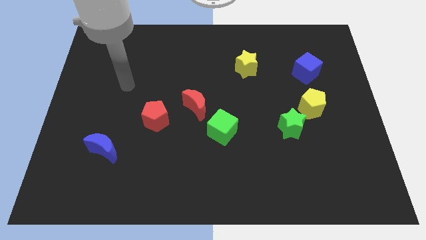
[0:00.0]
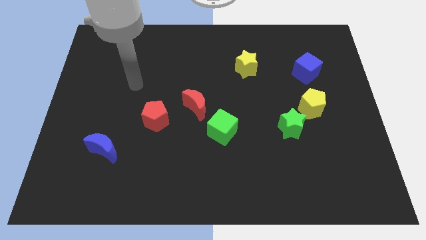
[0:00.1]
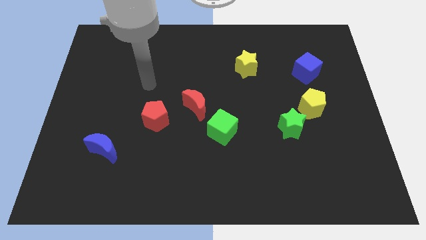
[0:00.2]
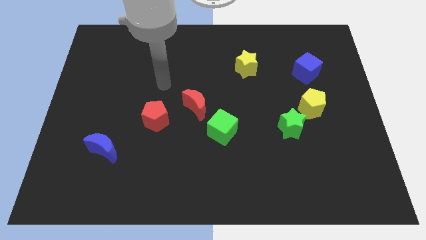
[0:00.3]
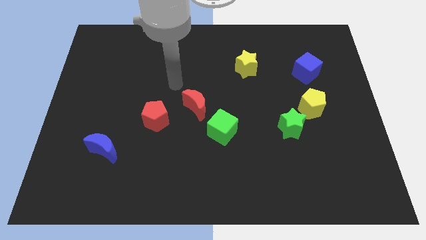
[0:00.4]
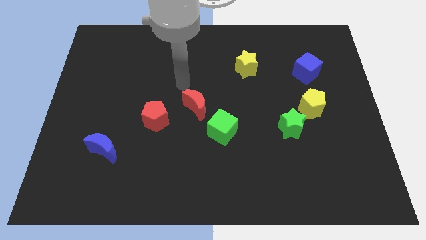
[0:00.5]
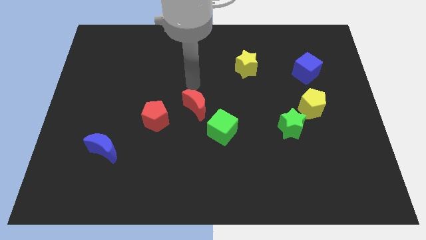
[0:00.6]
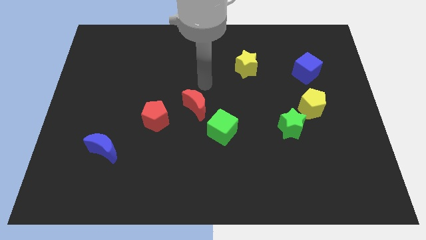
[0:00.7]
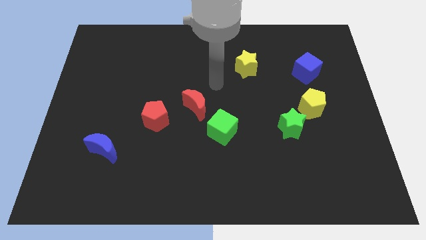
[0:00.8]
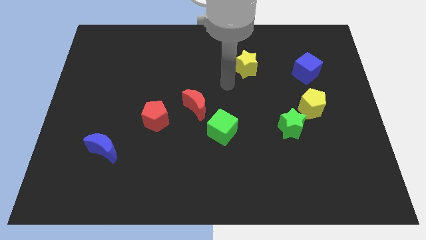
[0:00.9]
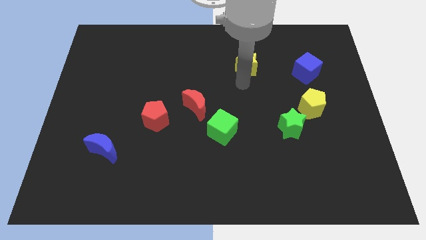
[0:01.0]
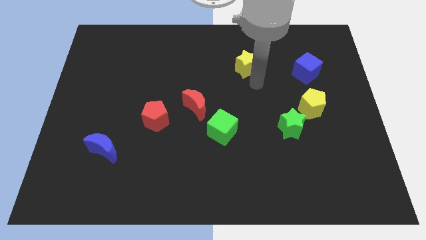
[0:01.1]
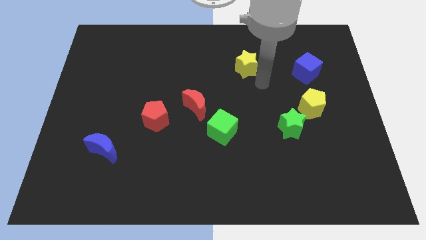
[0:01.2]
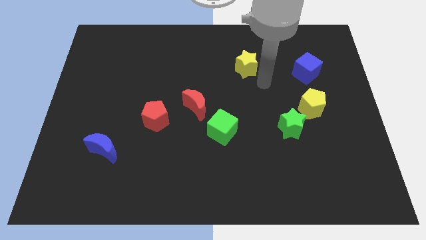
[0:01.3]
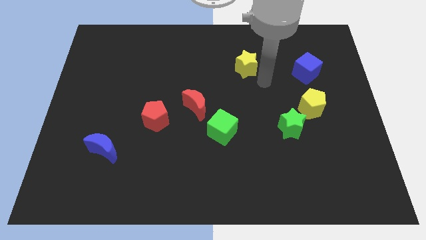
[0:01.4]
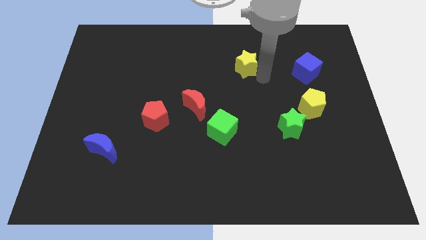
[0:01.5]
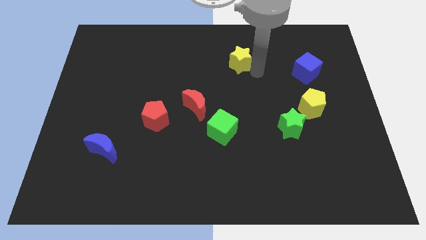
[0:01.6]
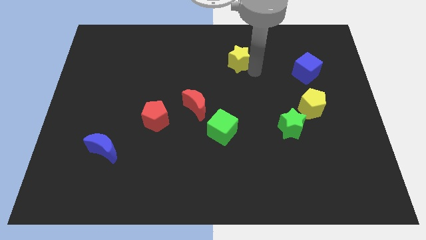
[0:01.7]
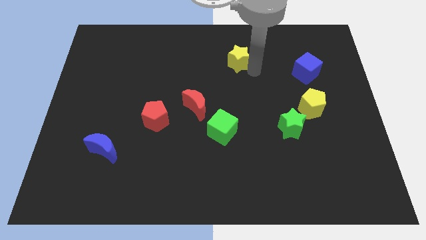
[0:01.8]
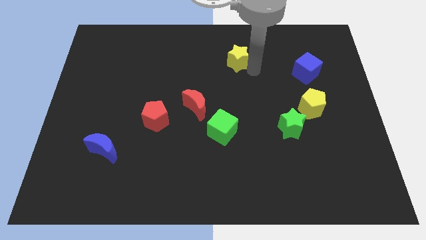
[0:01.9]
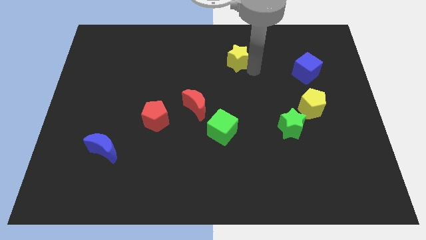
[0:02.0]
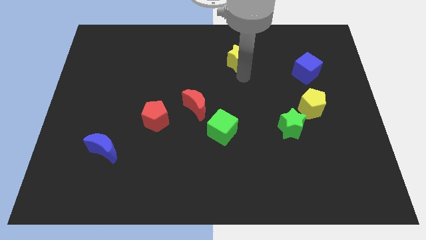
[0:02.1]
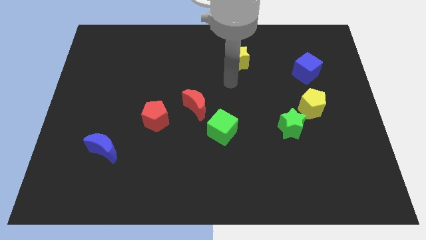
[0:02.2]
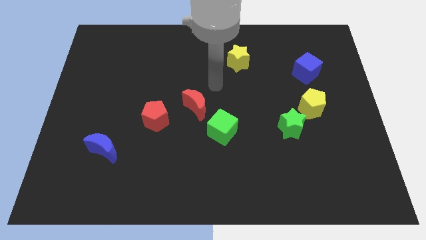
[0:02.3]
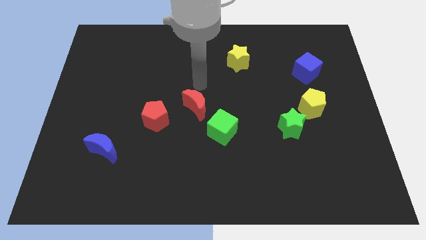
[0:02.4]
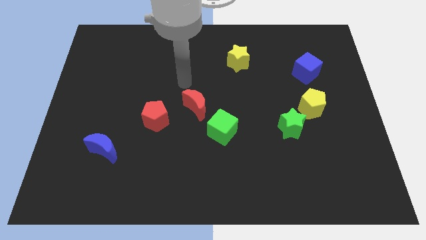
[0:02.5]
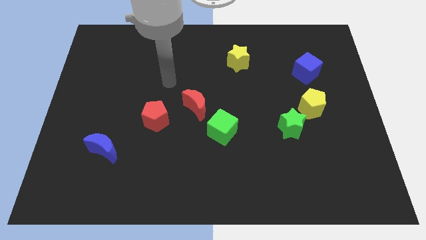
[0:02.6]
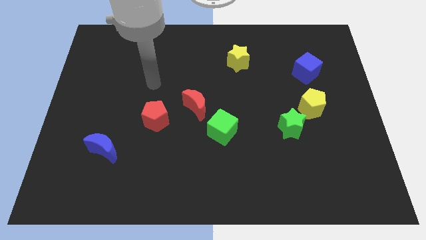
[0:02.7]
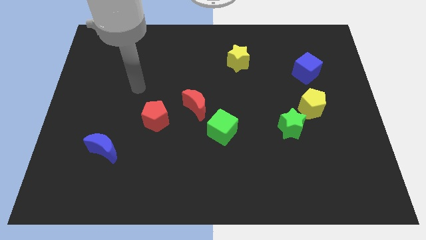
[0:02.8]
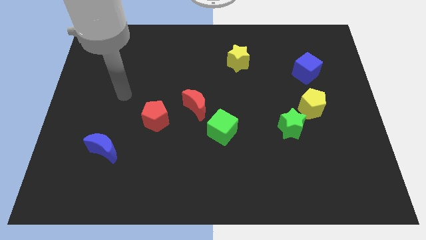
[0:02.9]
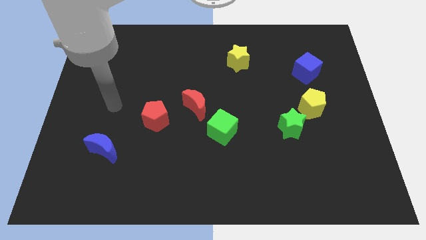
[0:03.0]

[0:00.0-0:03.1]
push the yellow star upwards slightly

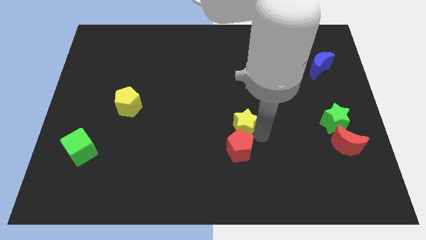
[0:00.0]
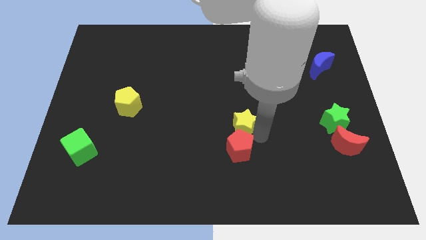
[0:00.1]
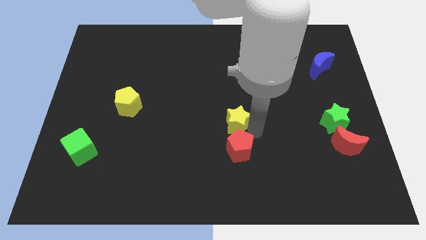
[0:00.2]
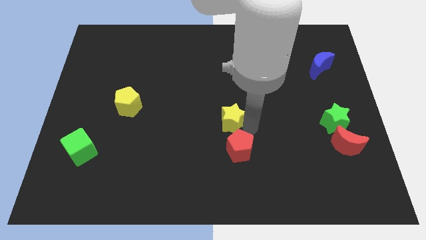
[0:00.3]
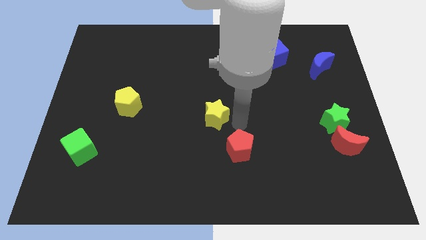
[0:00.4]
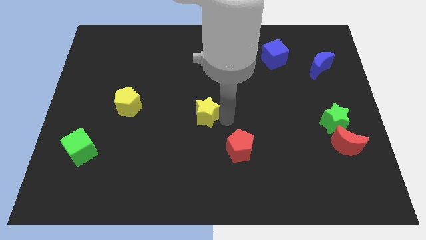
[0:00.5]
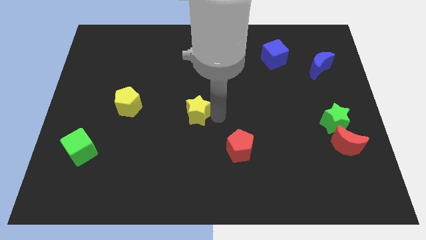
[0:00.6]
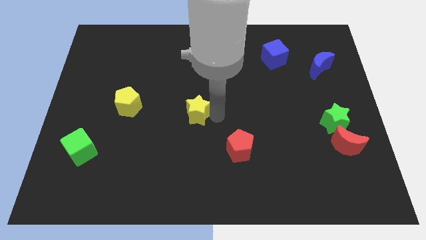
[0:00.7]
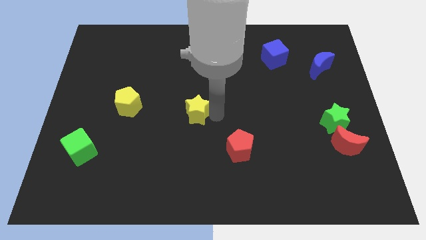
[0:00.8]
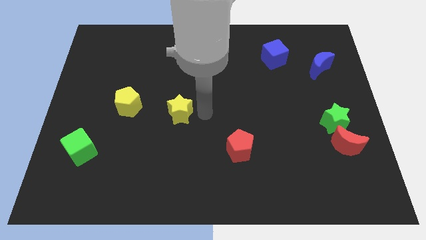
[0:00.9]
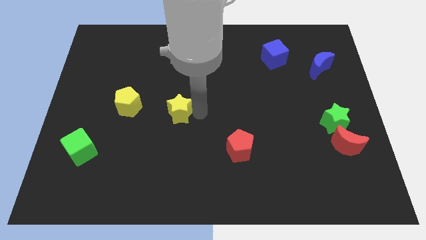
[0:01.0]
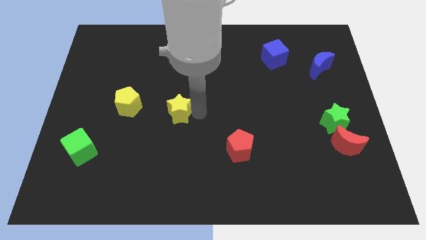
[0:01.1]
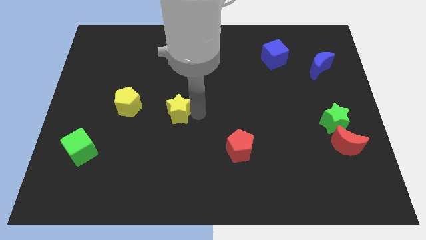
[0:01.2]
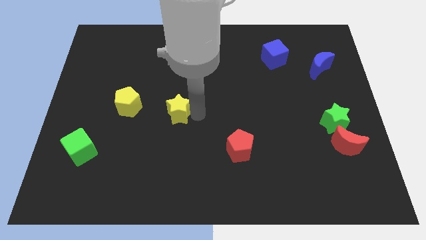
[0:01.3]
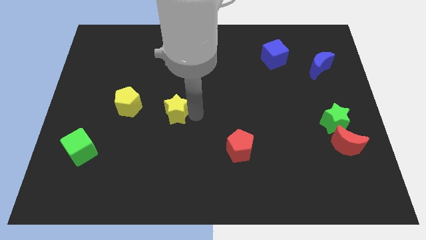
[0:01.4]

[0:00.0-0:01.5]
move yellow star away from the red pentagon

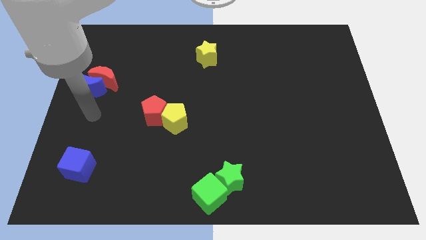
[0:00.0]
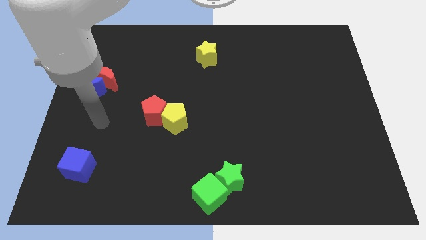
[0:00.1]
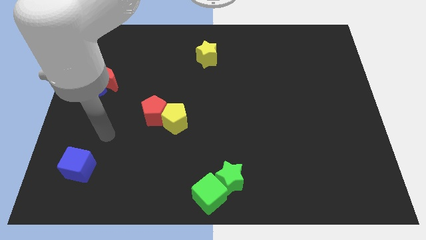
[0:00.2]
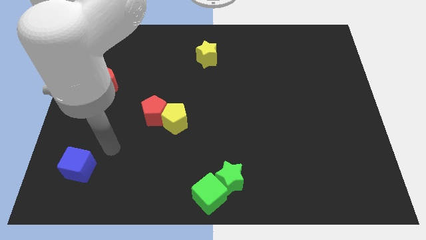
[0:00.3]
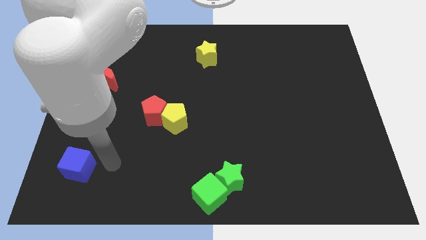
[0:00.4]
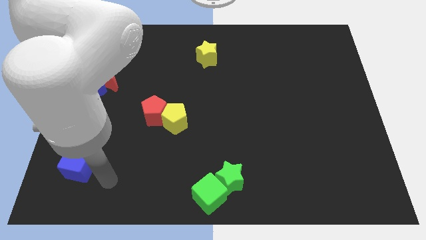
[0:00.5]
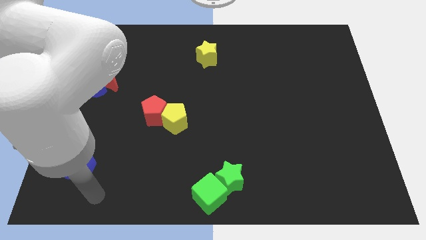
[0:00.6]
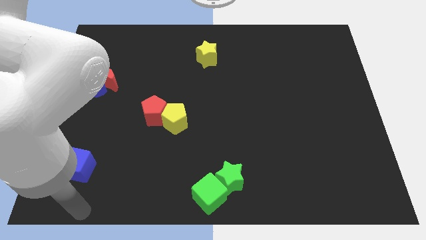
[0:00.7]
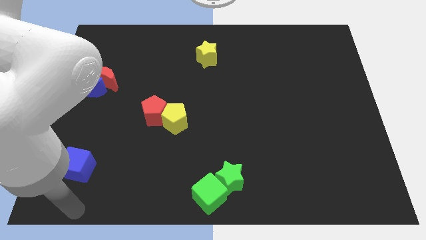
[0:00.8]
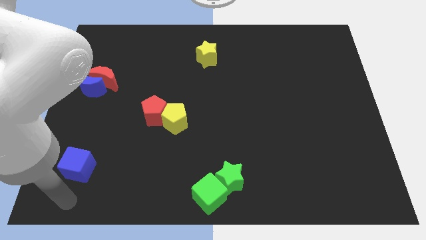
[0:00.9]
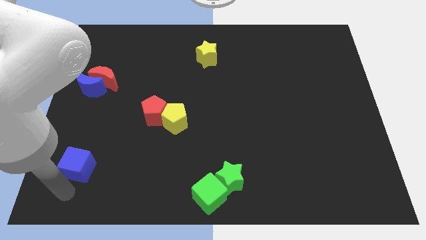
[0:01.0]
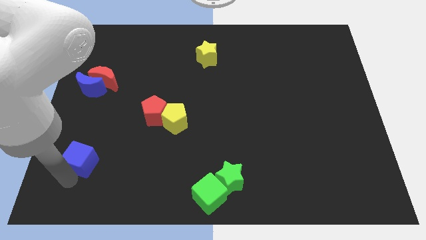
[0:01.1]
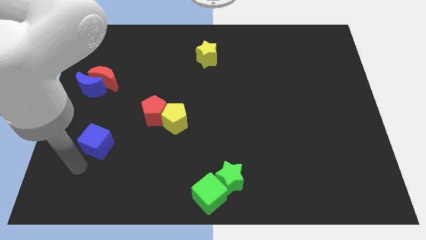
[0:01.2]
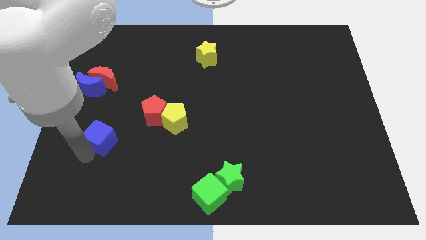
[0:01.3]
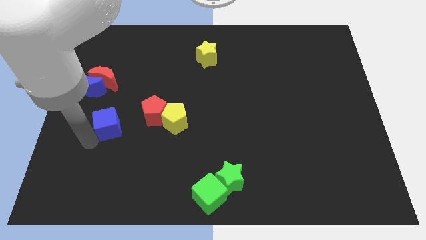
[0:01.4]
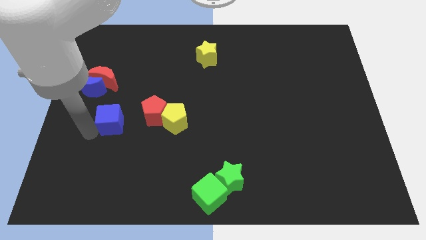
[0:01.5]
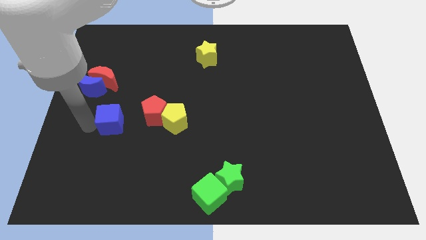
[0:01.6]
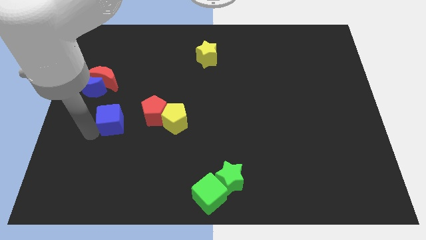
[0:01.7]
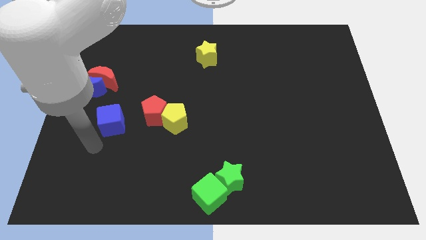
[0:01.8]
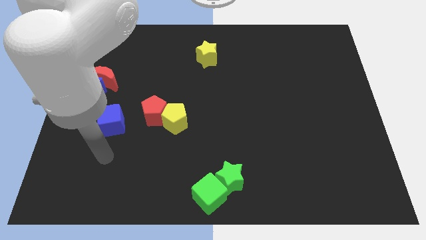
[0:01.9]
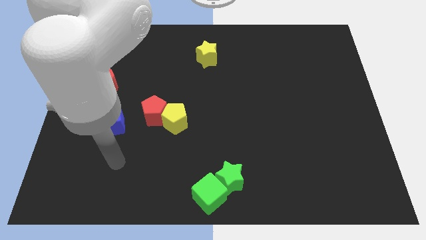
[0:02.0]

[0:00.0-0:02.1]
push the blue cube to the left side of the red pentagon

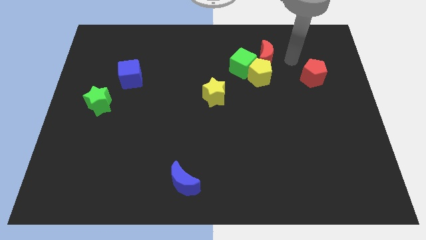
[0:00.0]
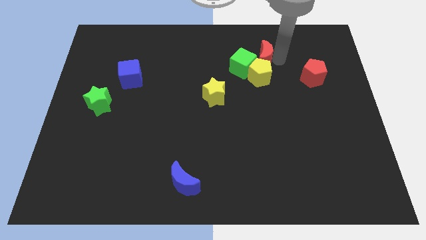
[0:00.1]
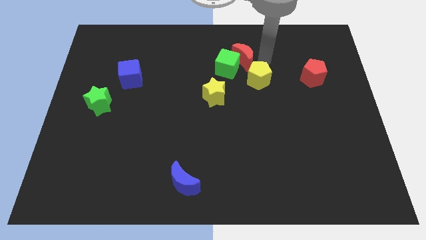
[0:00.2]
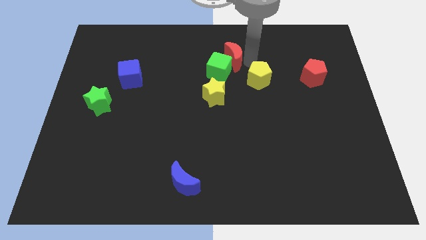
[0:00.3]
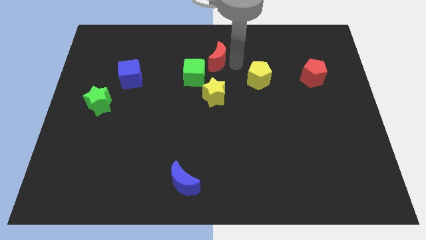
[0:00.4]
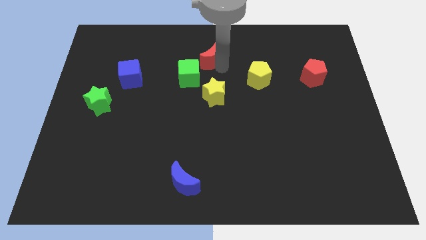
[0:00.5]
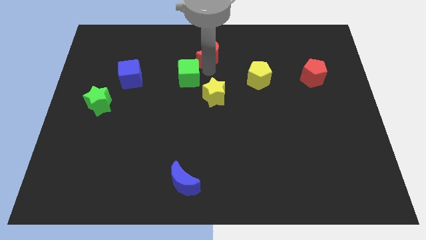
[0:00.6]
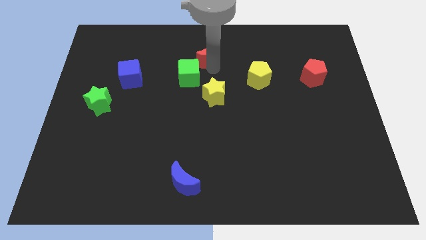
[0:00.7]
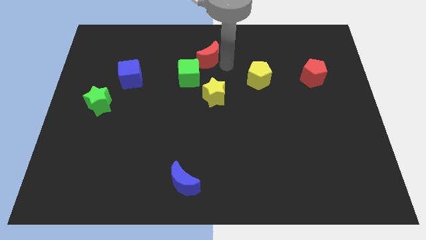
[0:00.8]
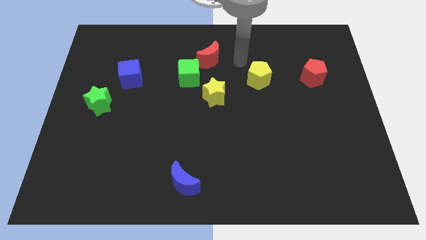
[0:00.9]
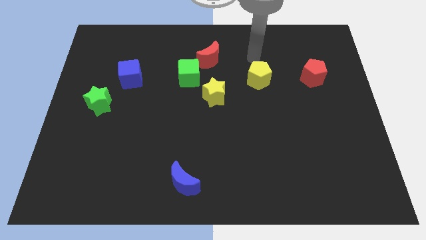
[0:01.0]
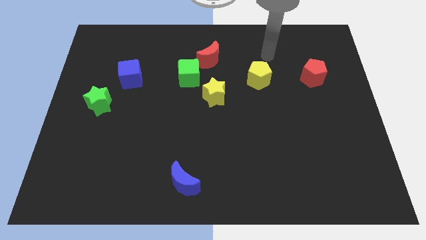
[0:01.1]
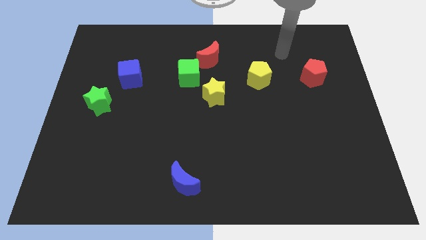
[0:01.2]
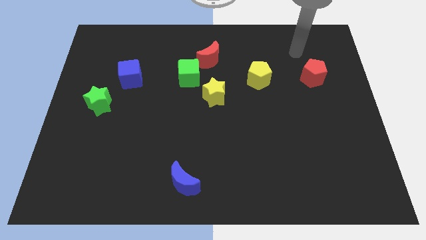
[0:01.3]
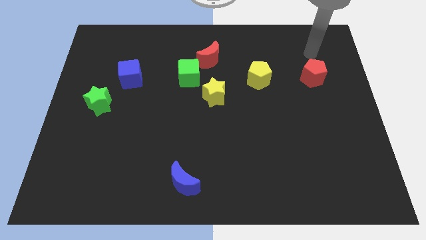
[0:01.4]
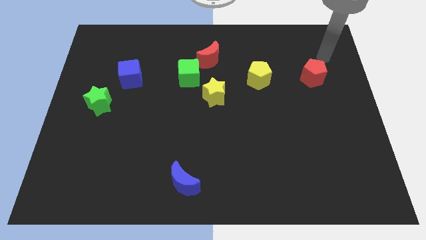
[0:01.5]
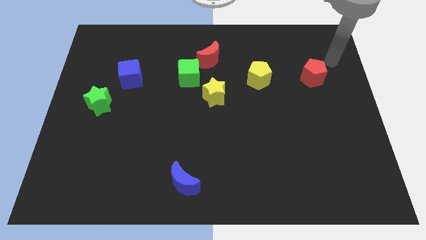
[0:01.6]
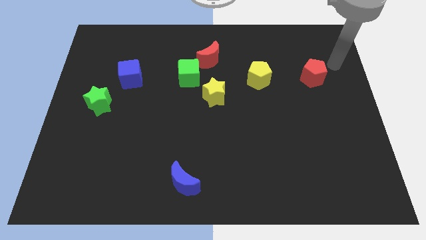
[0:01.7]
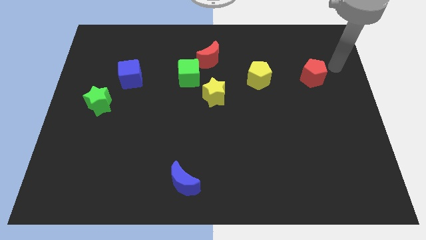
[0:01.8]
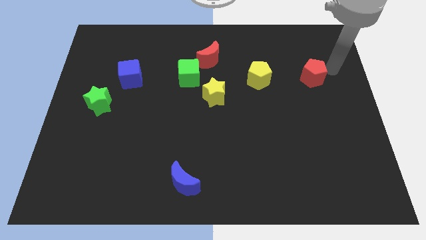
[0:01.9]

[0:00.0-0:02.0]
separate red moon and green cube from the yellow pentagon
